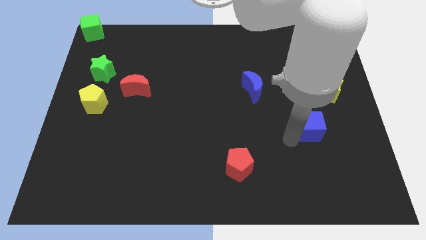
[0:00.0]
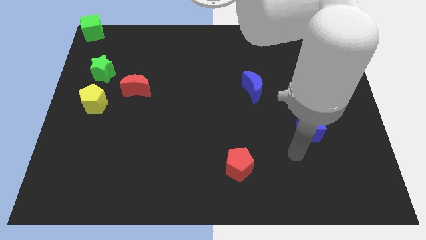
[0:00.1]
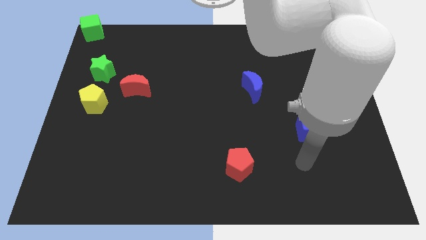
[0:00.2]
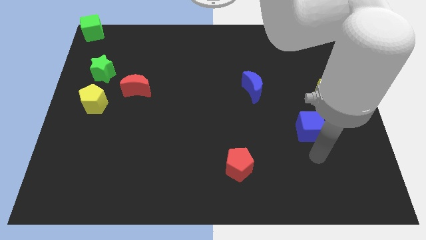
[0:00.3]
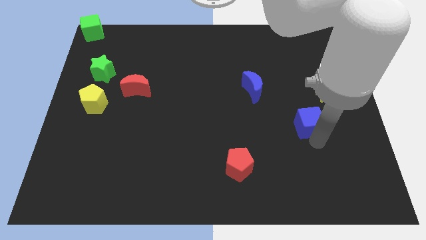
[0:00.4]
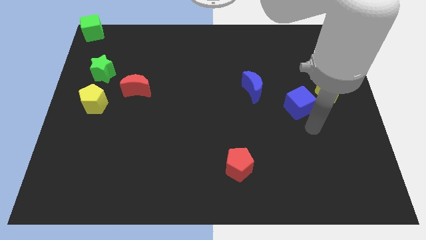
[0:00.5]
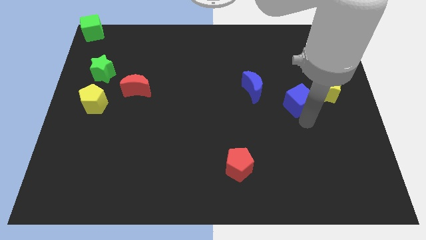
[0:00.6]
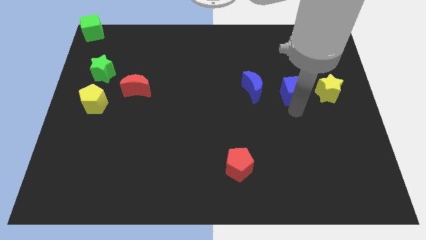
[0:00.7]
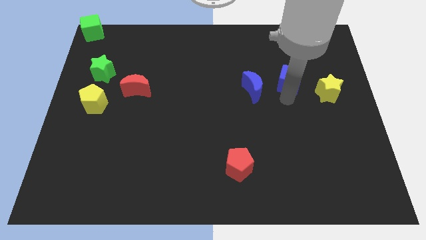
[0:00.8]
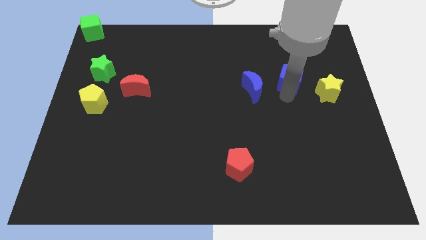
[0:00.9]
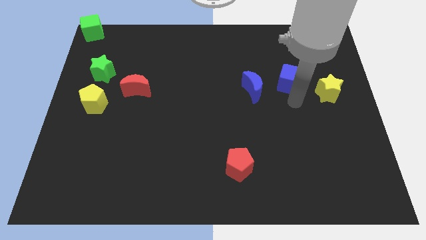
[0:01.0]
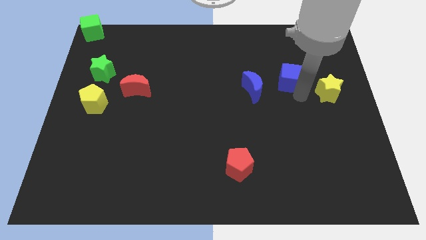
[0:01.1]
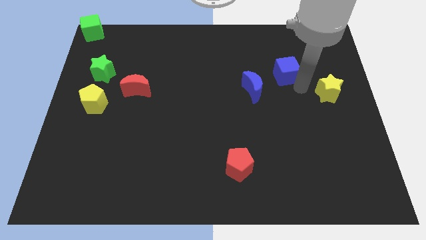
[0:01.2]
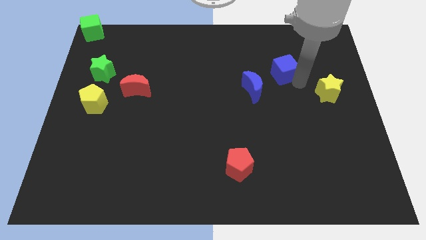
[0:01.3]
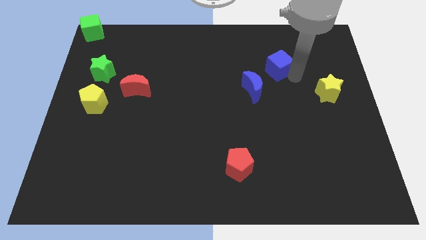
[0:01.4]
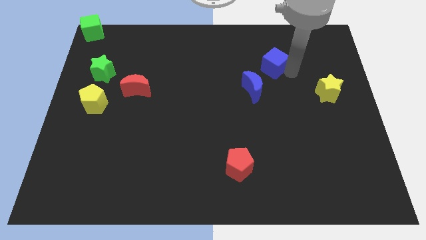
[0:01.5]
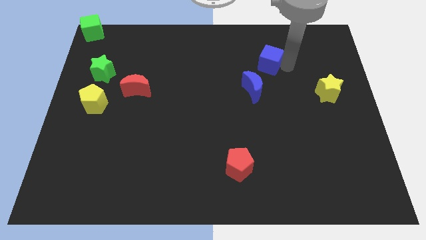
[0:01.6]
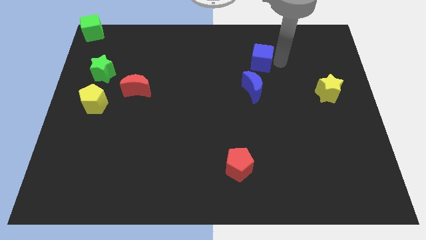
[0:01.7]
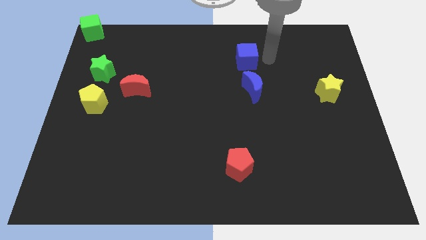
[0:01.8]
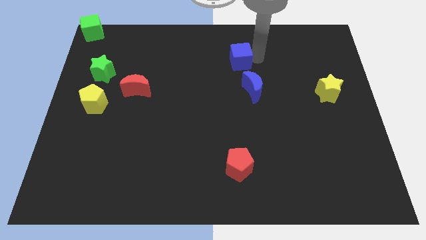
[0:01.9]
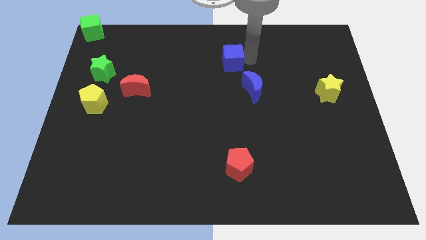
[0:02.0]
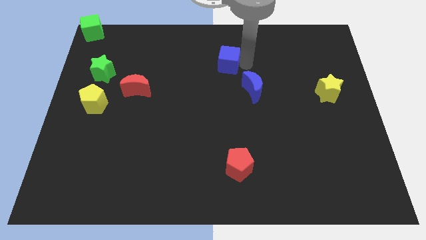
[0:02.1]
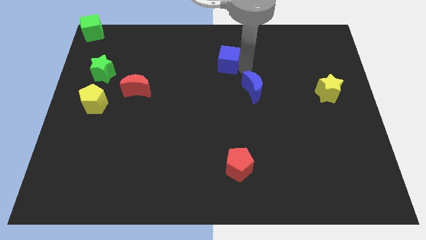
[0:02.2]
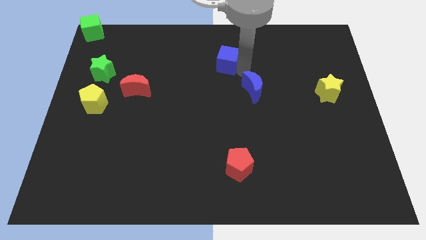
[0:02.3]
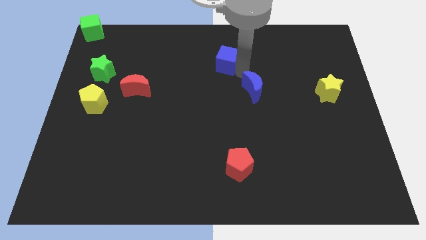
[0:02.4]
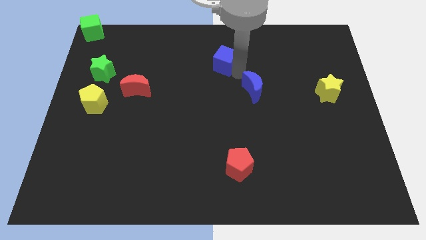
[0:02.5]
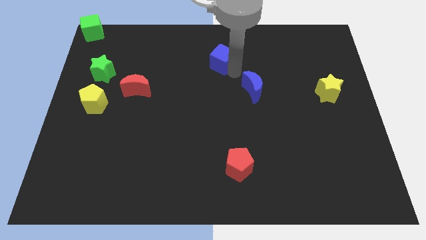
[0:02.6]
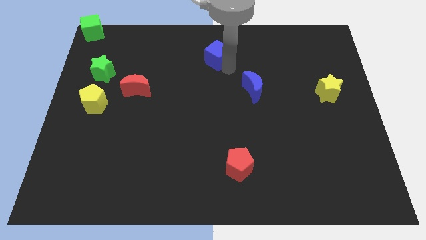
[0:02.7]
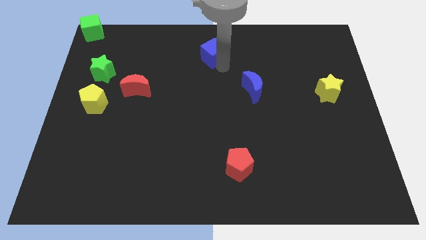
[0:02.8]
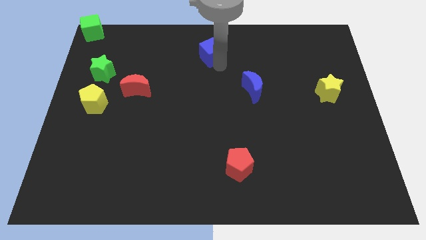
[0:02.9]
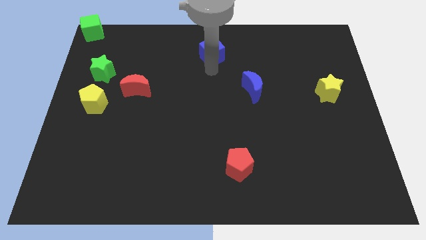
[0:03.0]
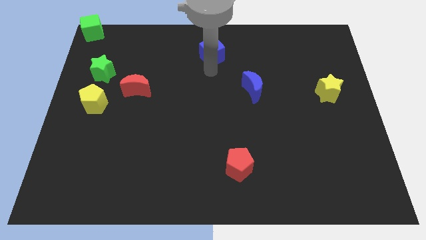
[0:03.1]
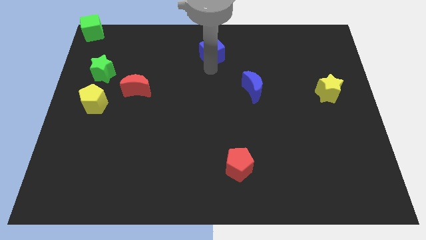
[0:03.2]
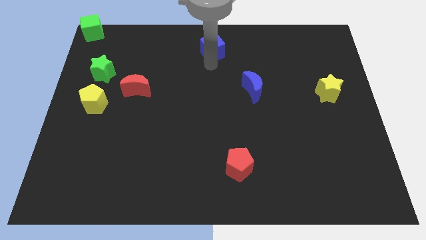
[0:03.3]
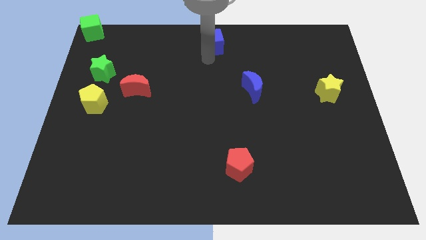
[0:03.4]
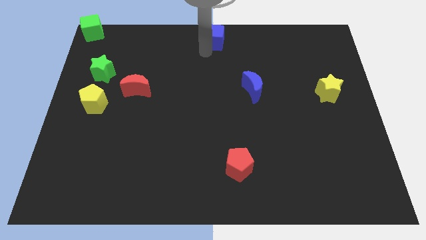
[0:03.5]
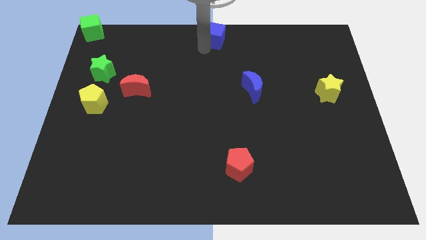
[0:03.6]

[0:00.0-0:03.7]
push the blue cube towards top center of the board

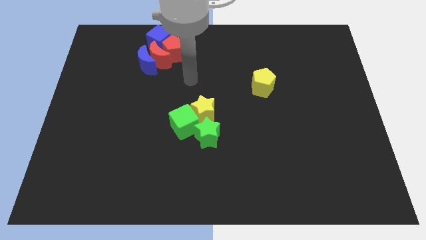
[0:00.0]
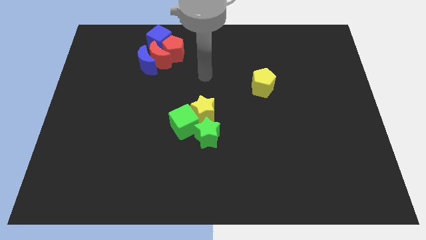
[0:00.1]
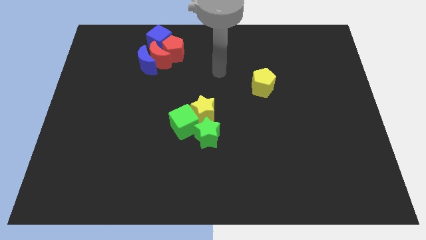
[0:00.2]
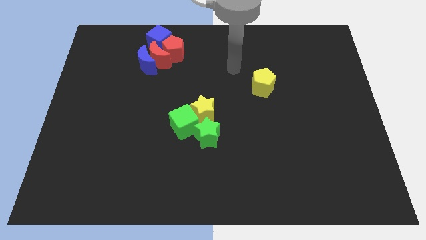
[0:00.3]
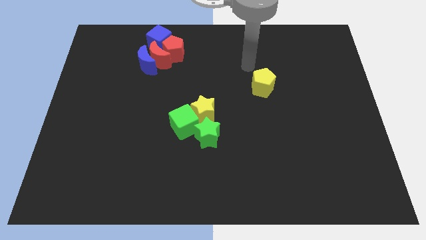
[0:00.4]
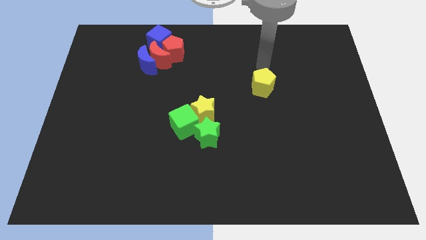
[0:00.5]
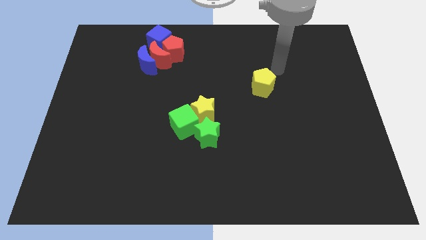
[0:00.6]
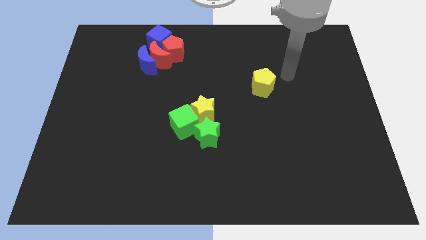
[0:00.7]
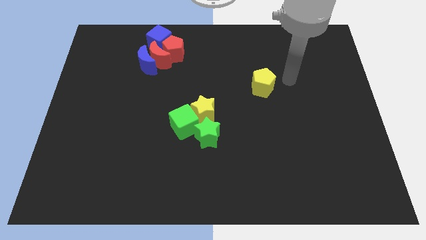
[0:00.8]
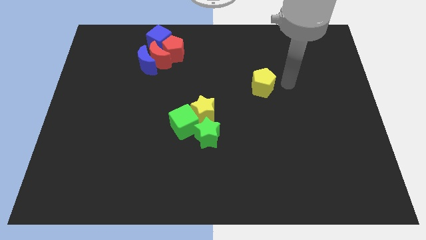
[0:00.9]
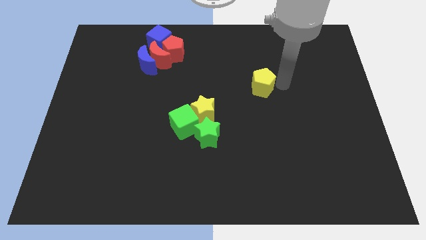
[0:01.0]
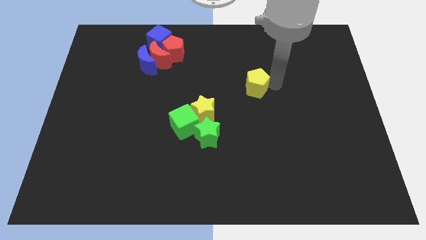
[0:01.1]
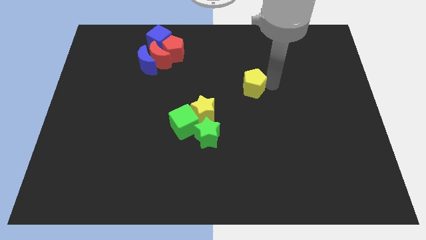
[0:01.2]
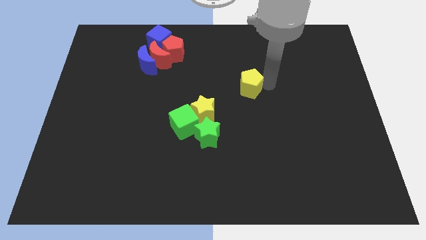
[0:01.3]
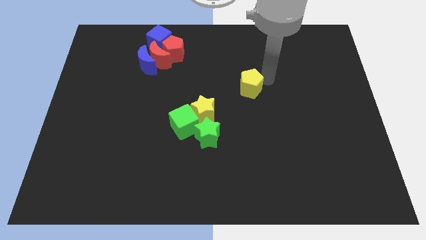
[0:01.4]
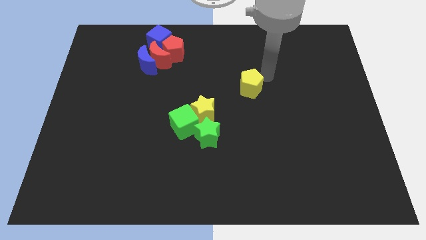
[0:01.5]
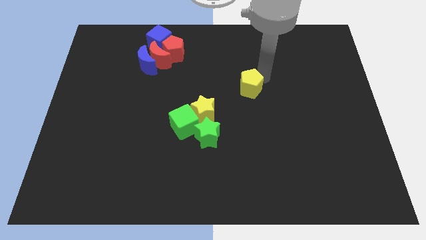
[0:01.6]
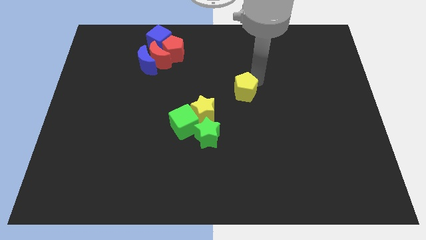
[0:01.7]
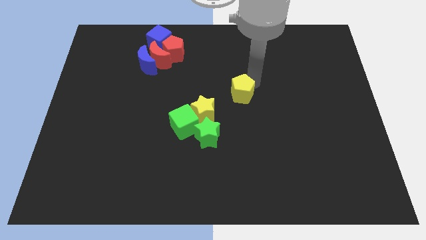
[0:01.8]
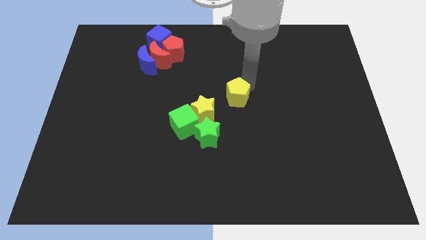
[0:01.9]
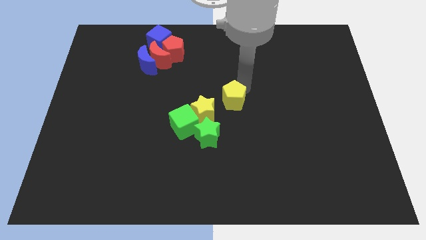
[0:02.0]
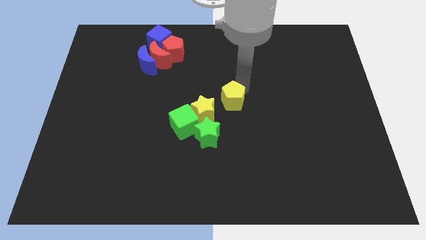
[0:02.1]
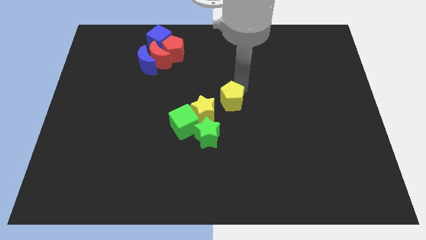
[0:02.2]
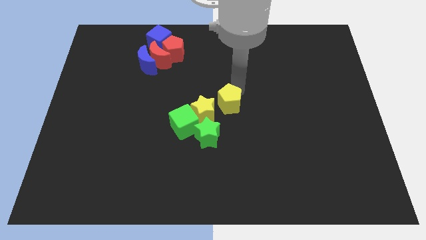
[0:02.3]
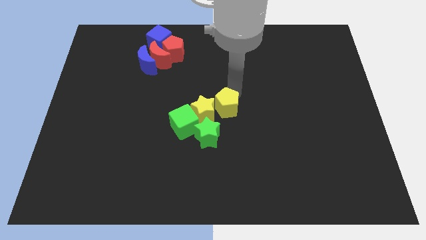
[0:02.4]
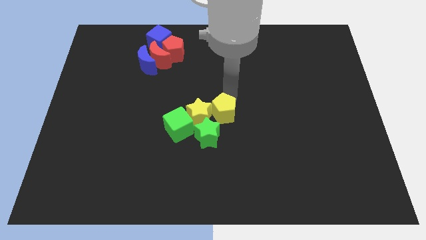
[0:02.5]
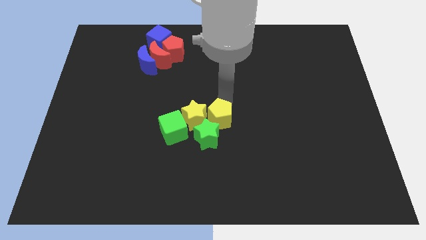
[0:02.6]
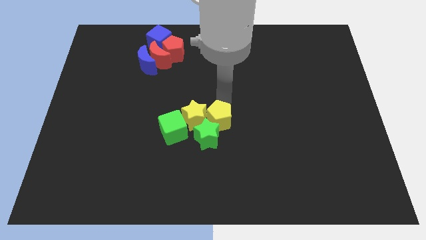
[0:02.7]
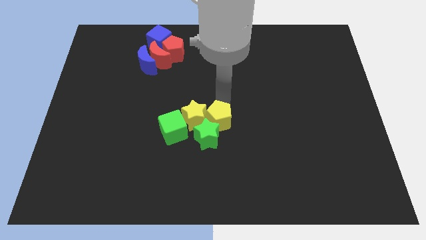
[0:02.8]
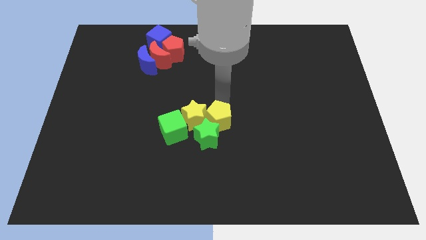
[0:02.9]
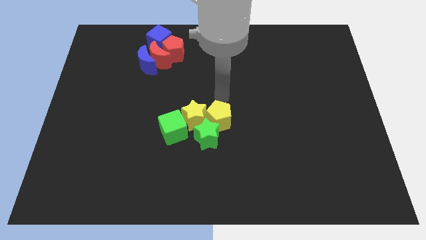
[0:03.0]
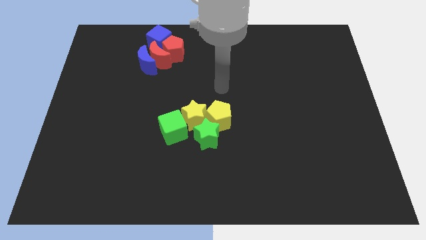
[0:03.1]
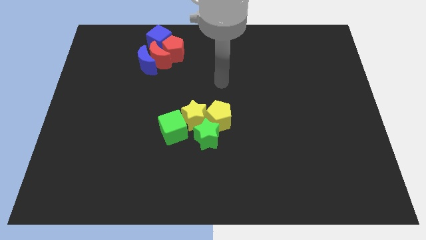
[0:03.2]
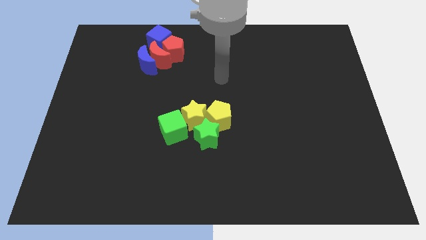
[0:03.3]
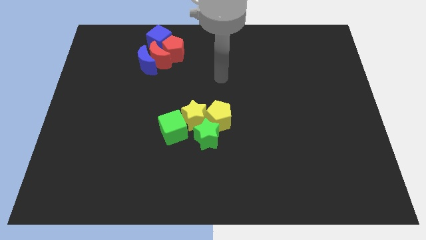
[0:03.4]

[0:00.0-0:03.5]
push the yellow pentagon into yellow star

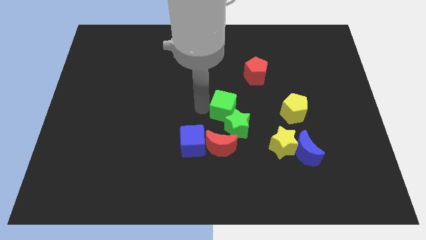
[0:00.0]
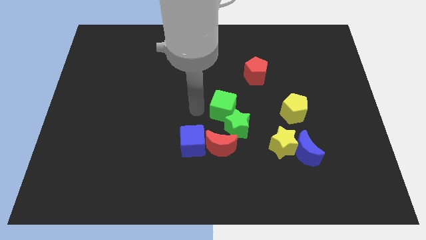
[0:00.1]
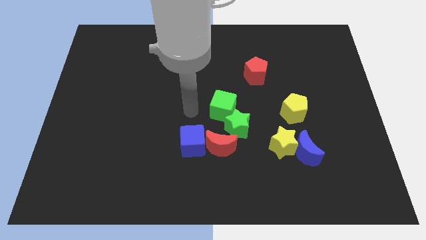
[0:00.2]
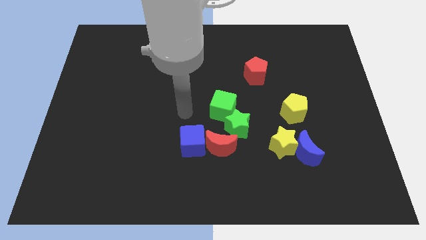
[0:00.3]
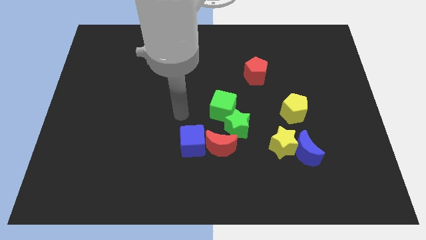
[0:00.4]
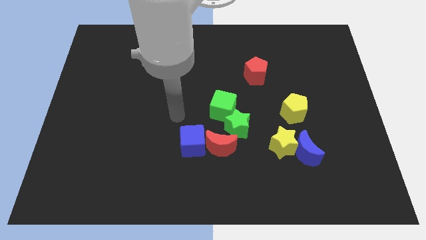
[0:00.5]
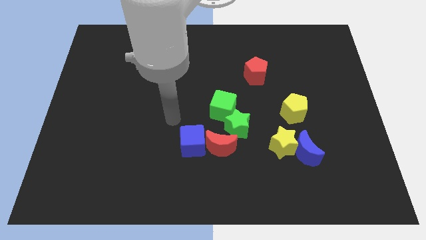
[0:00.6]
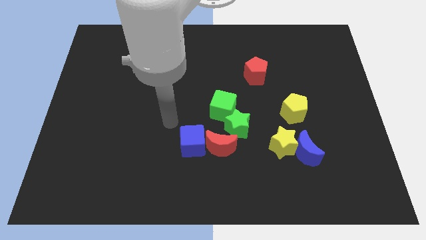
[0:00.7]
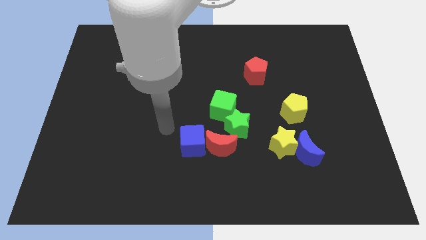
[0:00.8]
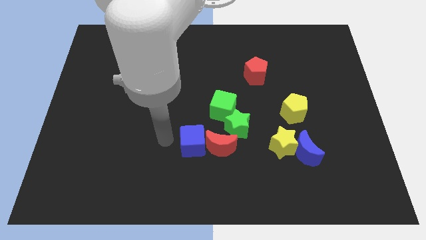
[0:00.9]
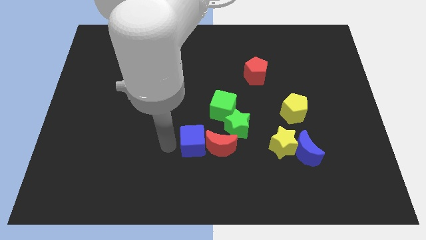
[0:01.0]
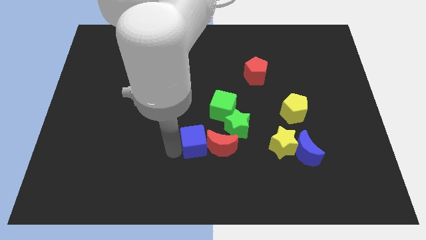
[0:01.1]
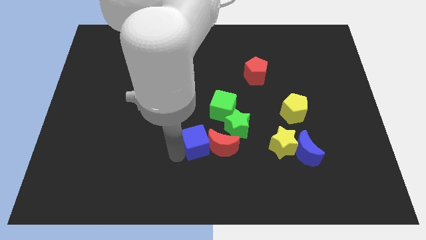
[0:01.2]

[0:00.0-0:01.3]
point your arm left to blue cube

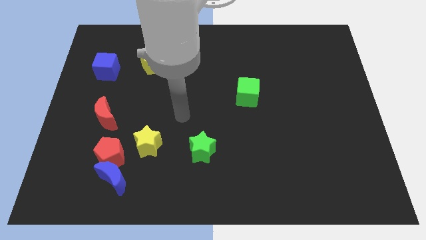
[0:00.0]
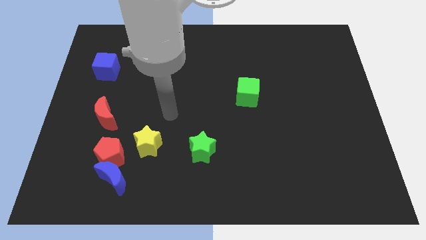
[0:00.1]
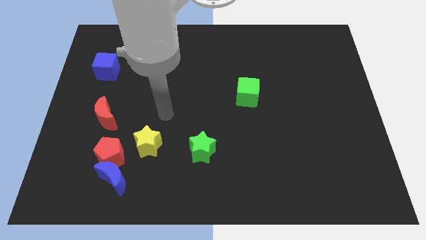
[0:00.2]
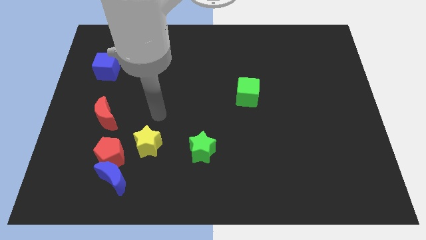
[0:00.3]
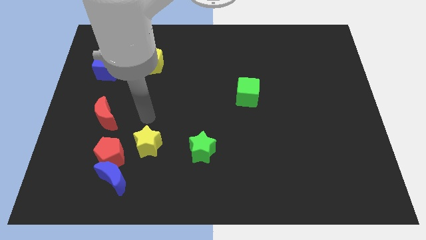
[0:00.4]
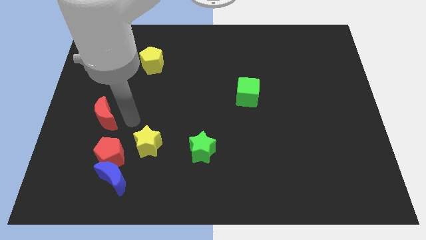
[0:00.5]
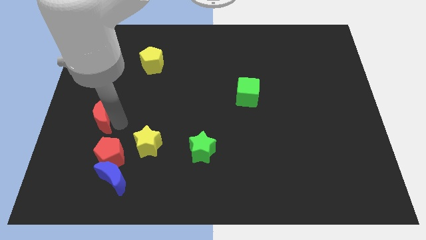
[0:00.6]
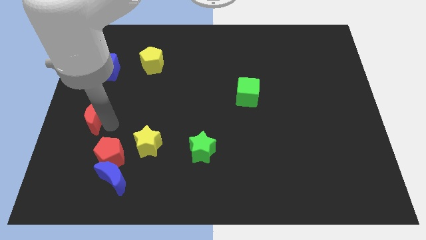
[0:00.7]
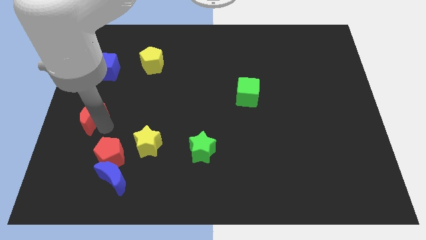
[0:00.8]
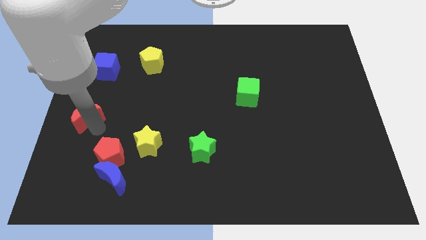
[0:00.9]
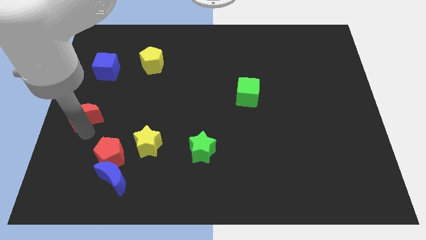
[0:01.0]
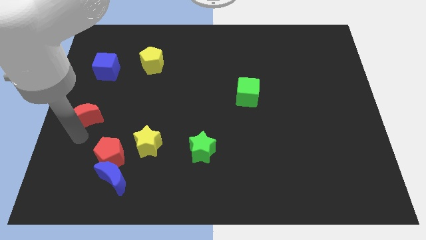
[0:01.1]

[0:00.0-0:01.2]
push the red crescent to the left of the board
